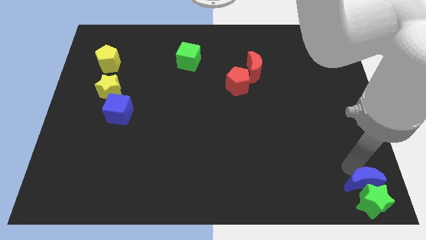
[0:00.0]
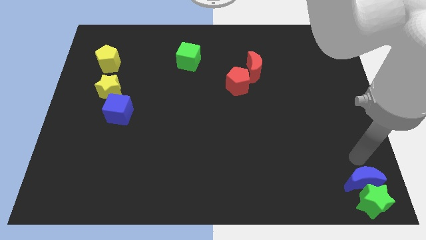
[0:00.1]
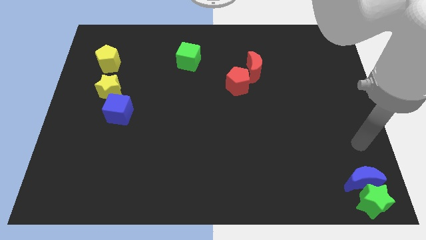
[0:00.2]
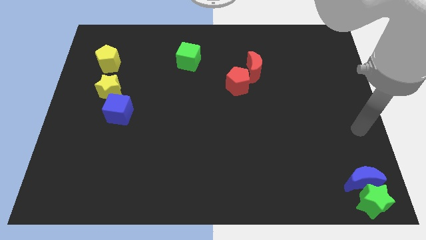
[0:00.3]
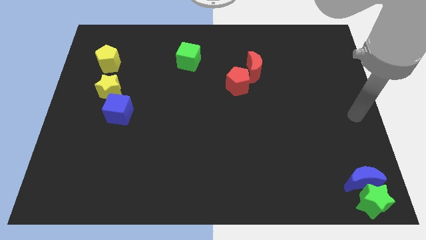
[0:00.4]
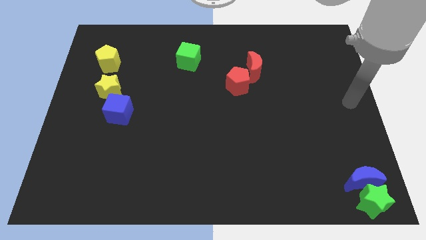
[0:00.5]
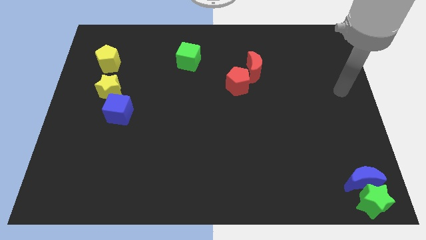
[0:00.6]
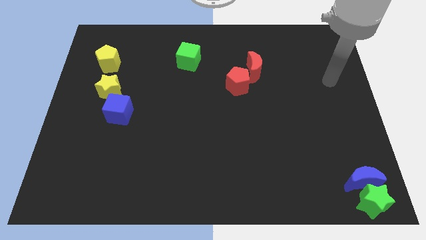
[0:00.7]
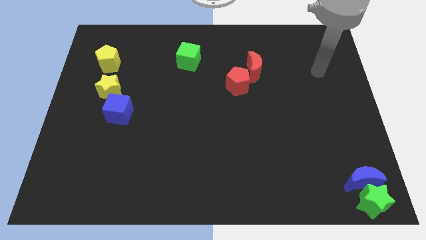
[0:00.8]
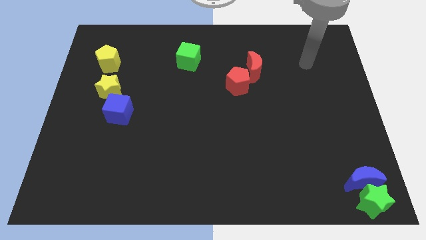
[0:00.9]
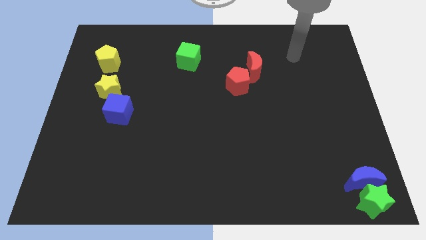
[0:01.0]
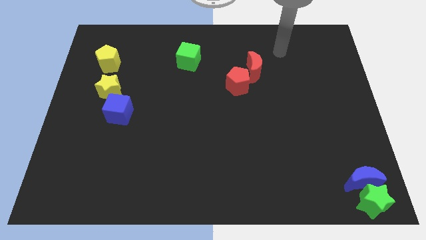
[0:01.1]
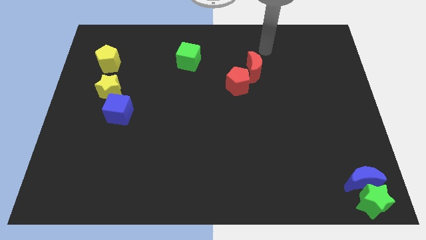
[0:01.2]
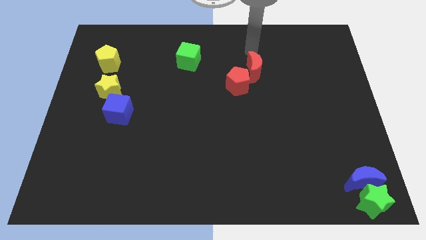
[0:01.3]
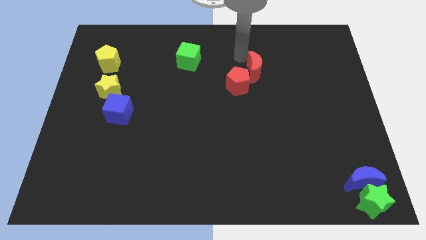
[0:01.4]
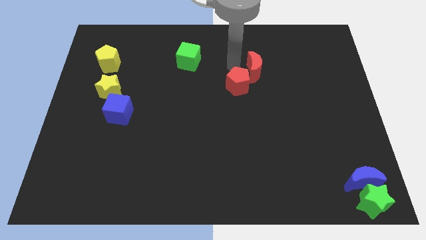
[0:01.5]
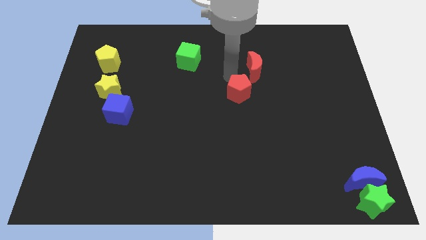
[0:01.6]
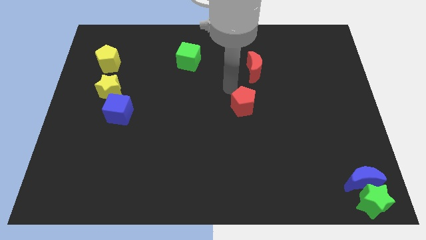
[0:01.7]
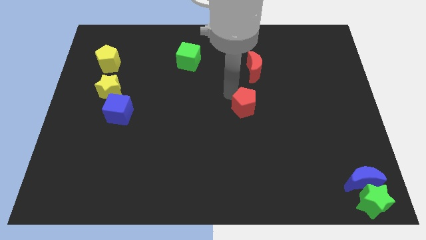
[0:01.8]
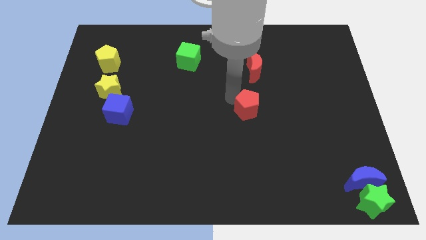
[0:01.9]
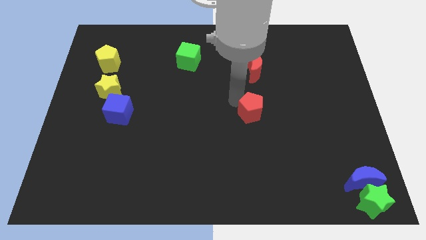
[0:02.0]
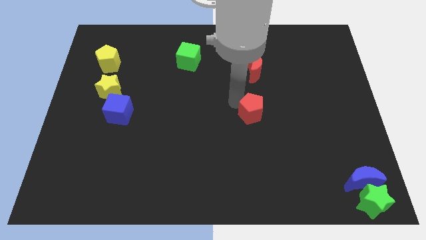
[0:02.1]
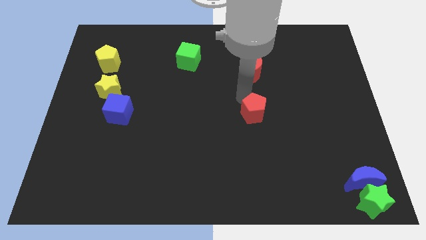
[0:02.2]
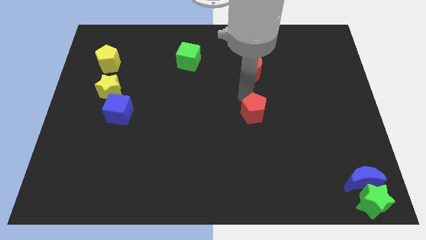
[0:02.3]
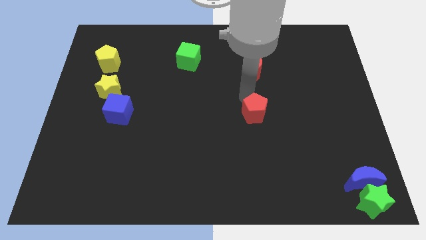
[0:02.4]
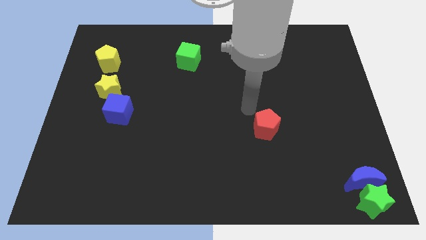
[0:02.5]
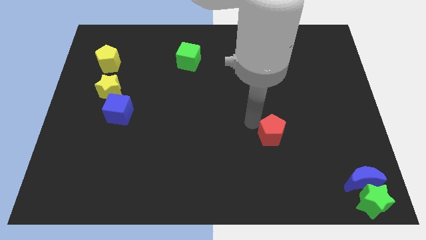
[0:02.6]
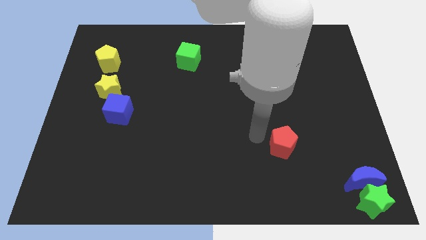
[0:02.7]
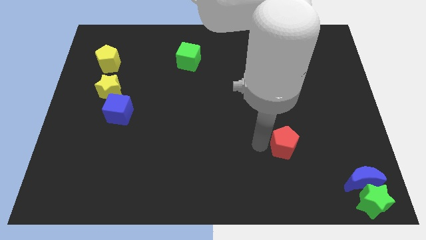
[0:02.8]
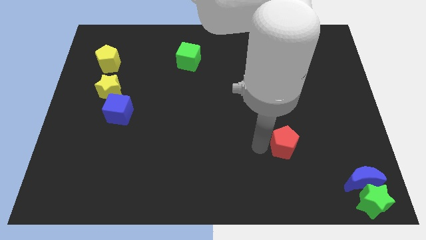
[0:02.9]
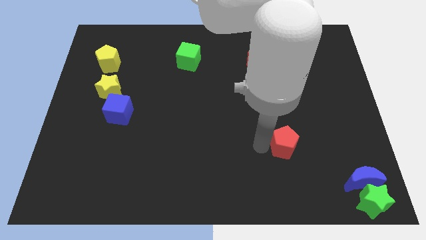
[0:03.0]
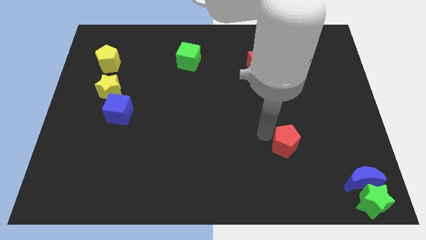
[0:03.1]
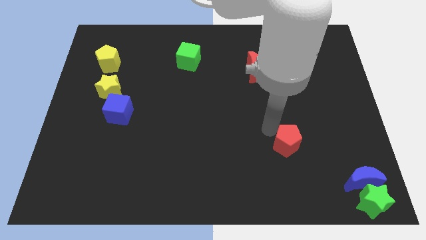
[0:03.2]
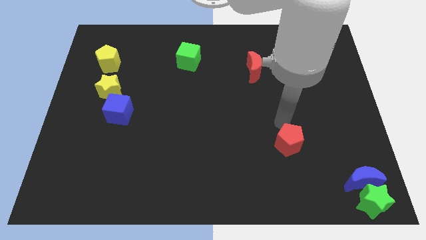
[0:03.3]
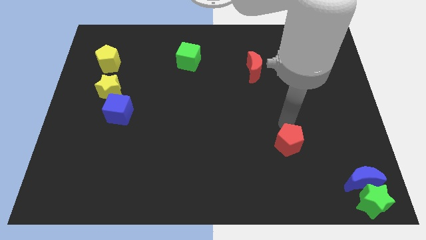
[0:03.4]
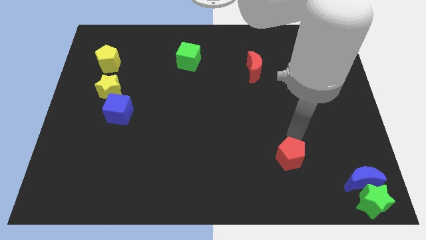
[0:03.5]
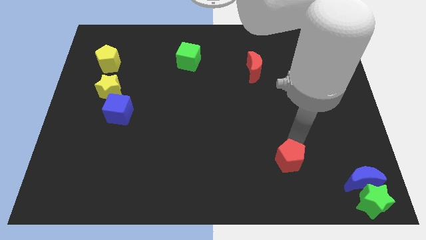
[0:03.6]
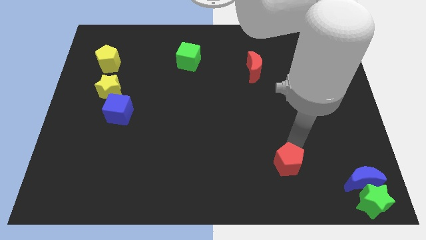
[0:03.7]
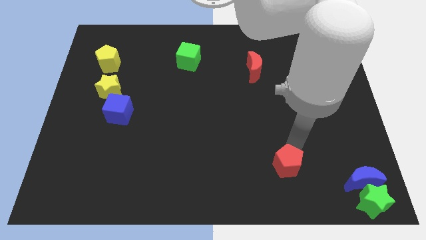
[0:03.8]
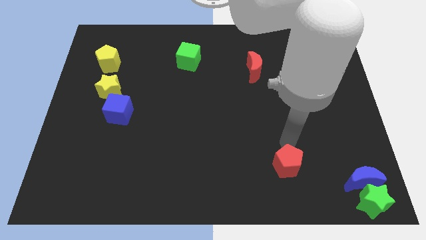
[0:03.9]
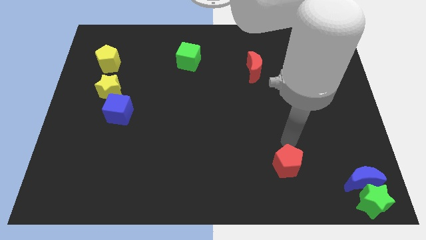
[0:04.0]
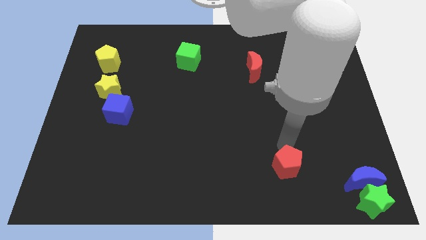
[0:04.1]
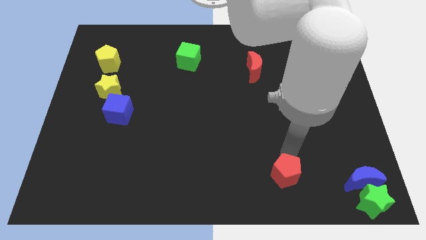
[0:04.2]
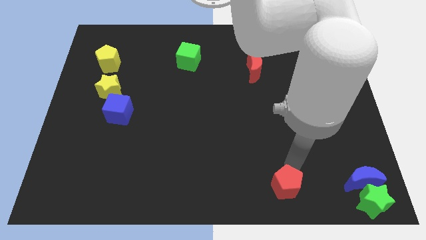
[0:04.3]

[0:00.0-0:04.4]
move the red pentagon towards the bottom center

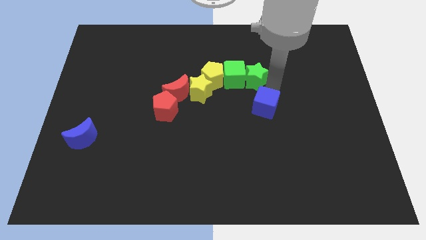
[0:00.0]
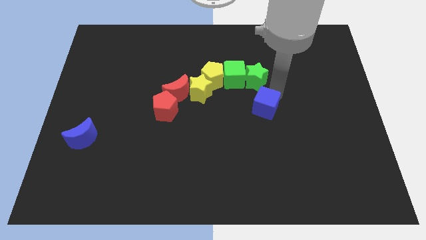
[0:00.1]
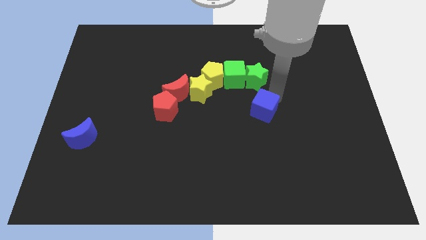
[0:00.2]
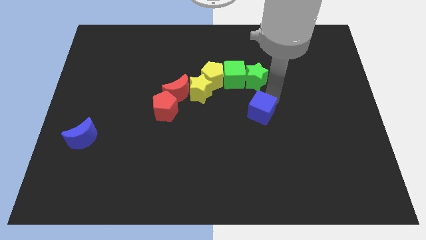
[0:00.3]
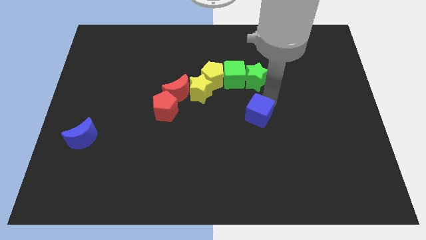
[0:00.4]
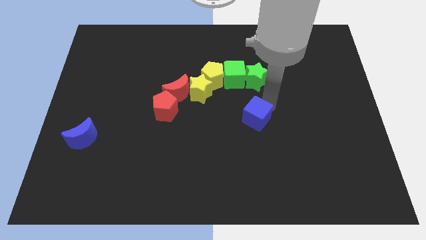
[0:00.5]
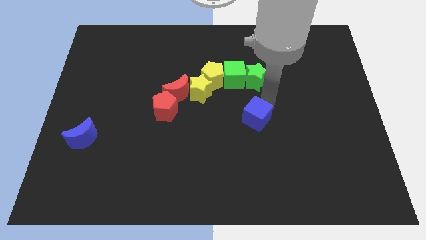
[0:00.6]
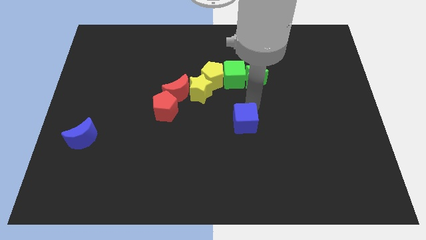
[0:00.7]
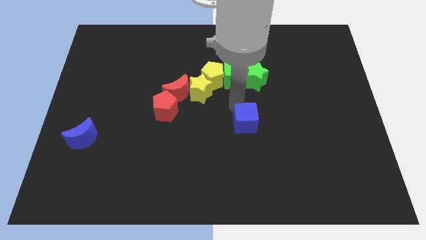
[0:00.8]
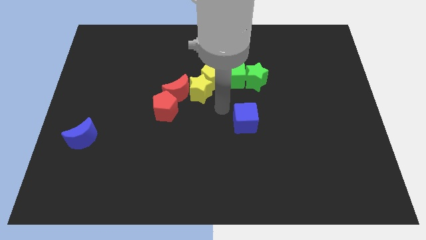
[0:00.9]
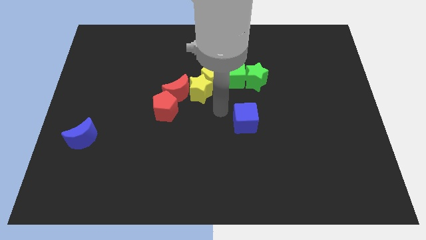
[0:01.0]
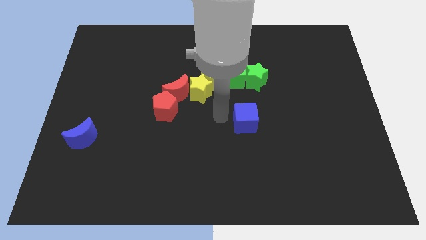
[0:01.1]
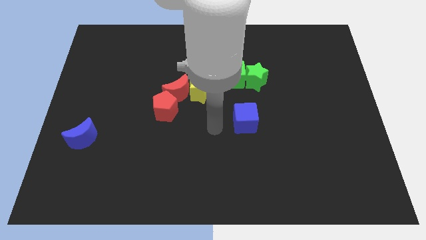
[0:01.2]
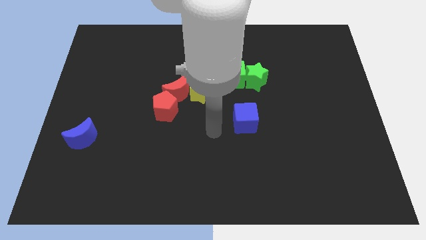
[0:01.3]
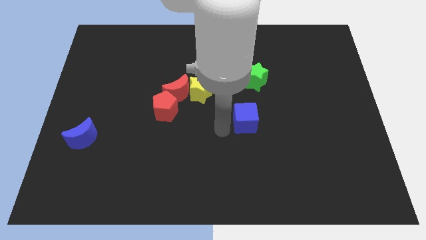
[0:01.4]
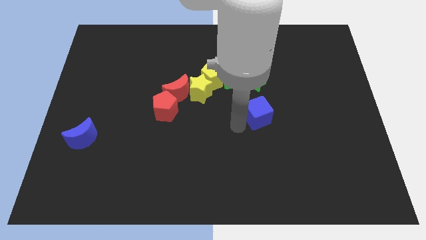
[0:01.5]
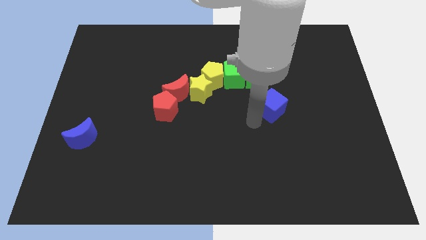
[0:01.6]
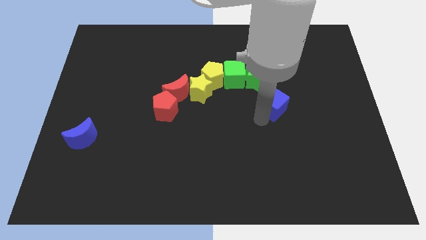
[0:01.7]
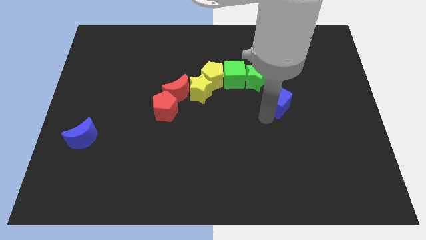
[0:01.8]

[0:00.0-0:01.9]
disturb the blue cube

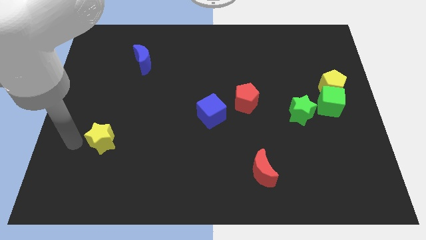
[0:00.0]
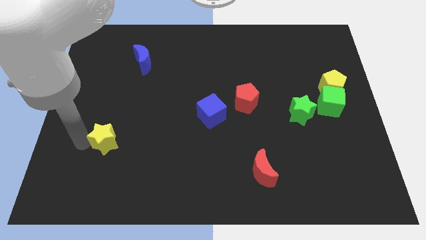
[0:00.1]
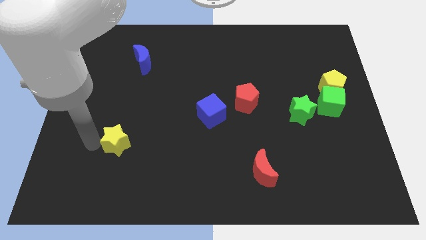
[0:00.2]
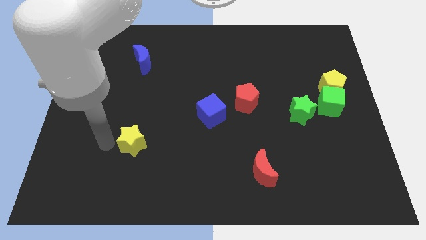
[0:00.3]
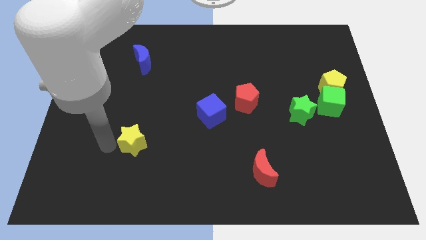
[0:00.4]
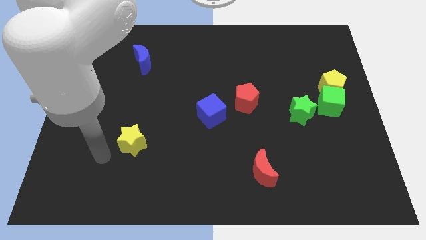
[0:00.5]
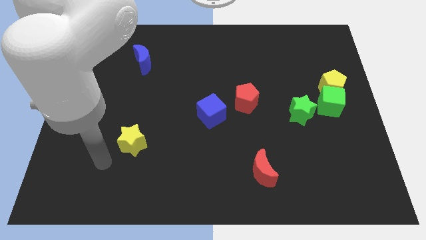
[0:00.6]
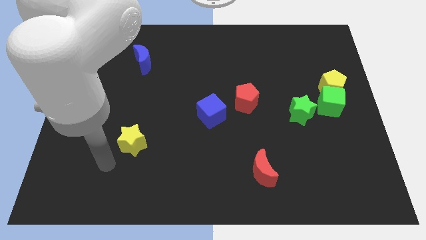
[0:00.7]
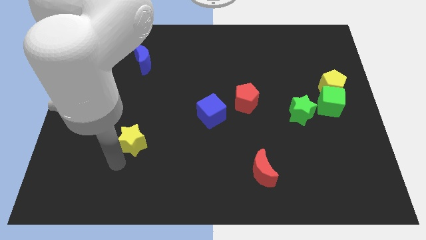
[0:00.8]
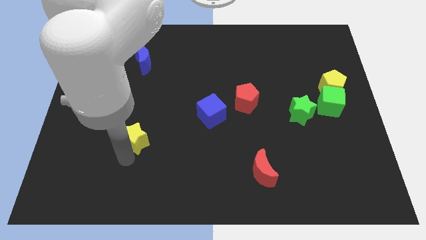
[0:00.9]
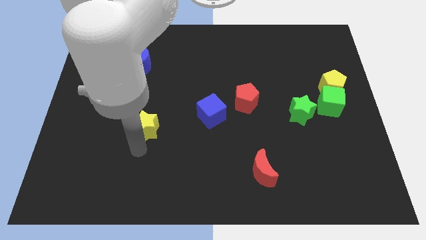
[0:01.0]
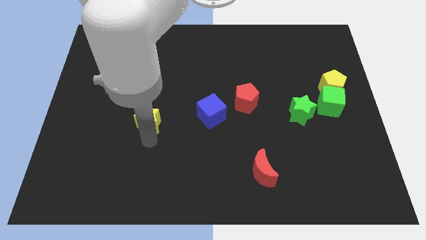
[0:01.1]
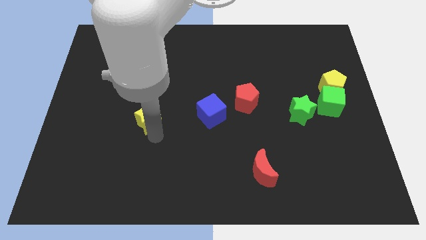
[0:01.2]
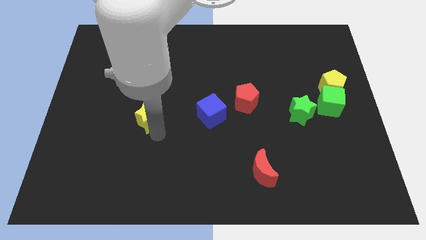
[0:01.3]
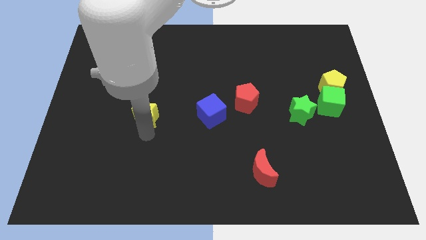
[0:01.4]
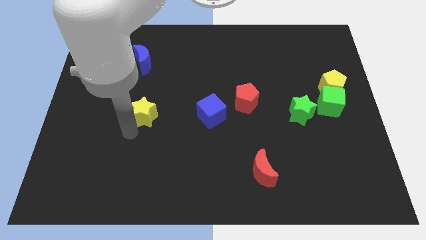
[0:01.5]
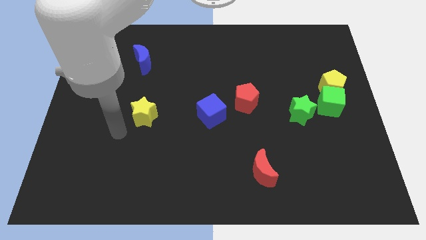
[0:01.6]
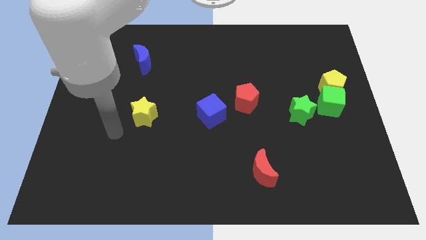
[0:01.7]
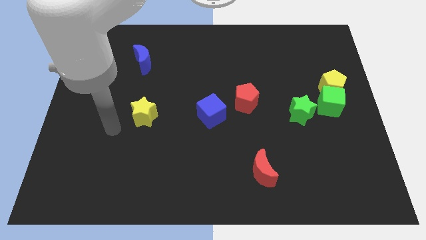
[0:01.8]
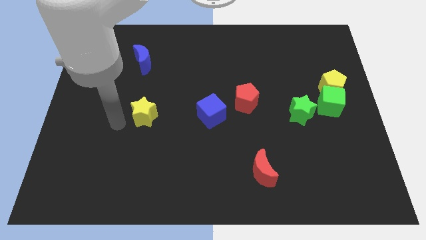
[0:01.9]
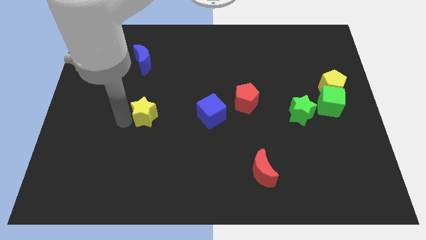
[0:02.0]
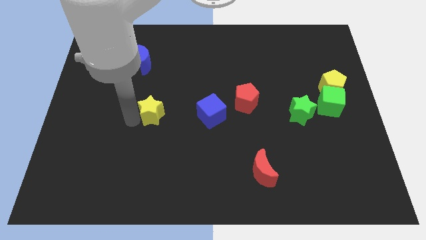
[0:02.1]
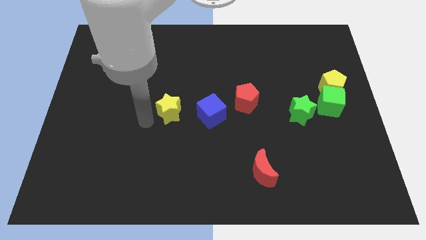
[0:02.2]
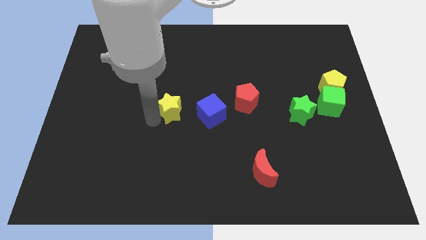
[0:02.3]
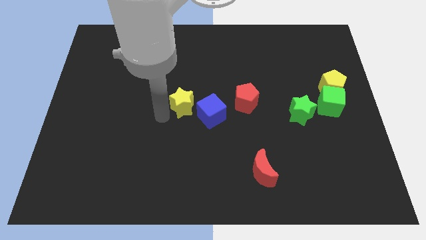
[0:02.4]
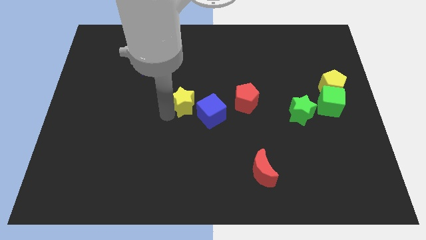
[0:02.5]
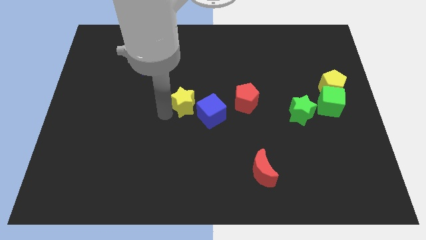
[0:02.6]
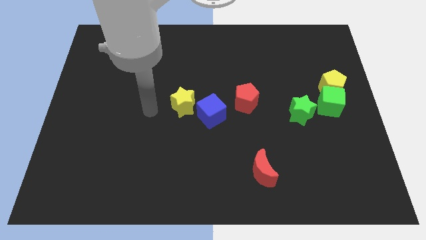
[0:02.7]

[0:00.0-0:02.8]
place the yellow star diagonally bottom right to the blue moon
